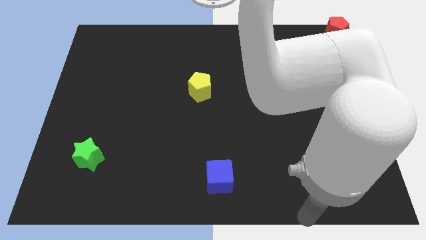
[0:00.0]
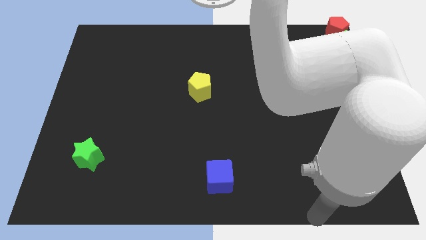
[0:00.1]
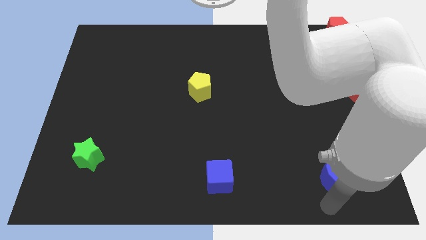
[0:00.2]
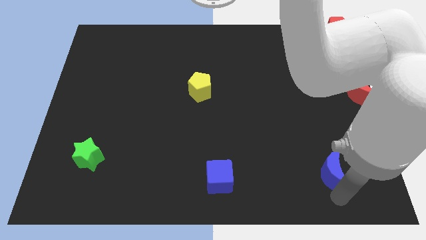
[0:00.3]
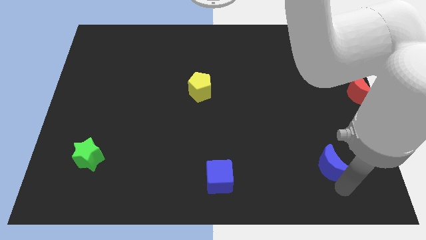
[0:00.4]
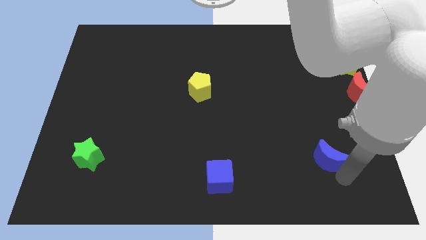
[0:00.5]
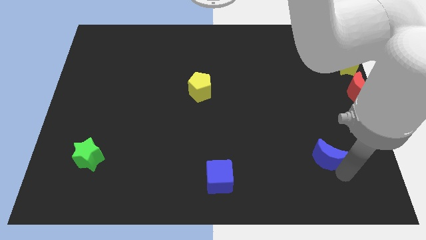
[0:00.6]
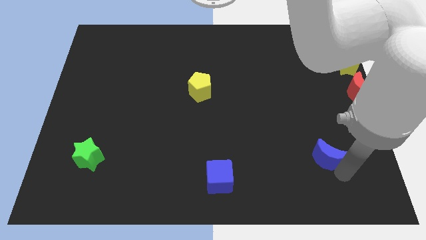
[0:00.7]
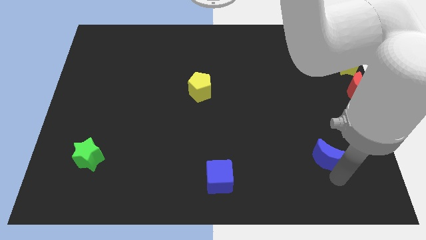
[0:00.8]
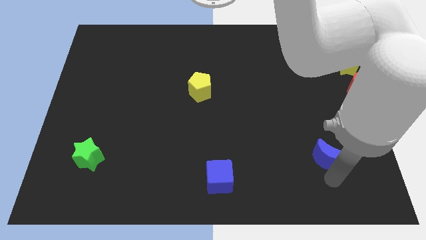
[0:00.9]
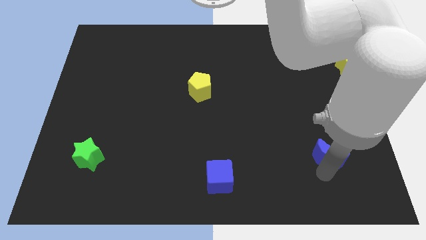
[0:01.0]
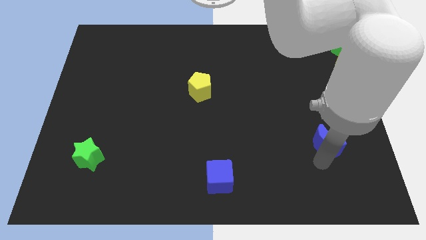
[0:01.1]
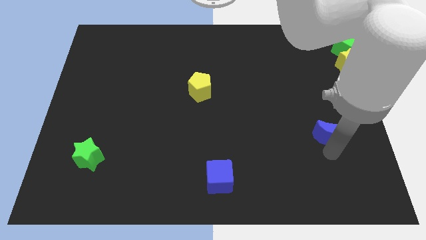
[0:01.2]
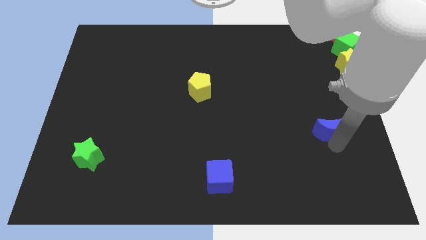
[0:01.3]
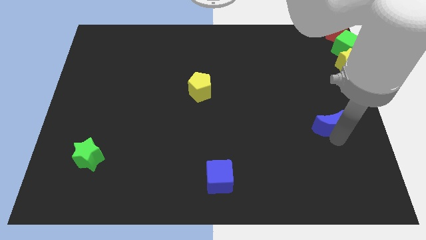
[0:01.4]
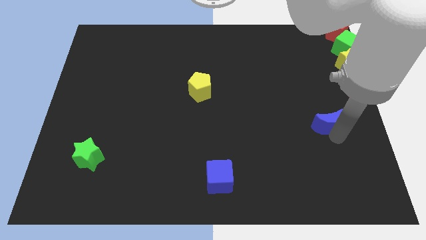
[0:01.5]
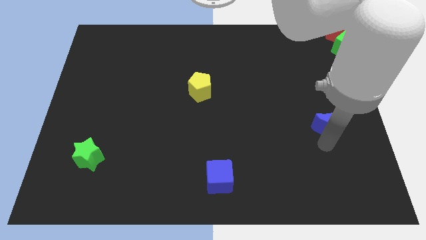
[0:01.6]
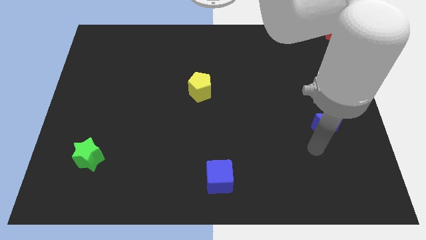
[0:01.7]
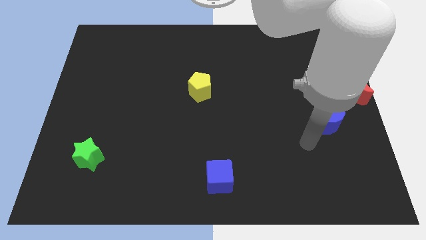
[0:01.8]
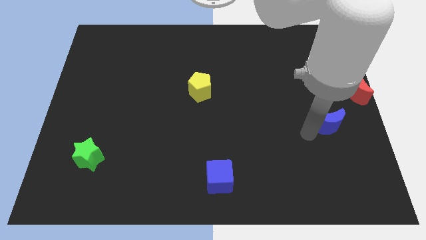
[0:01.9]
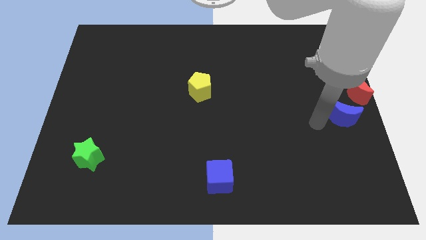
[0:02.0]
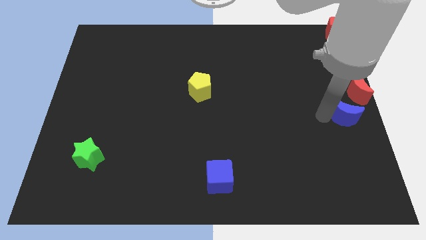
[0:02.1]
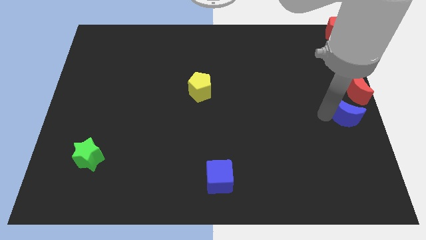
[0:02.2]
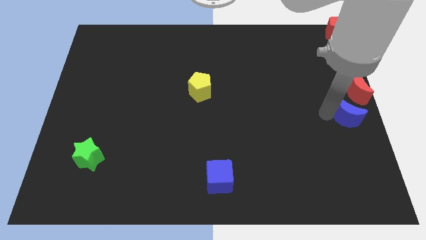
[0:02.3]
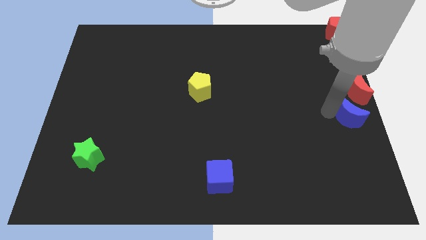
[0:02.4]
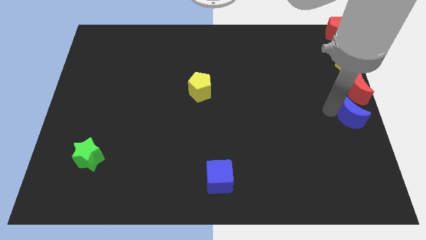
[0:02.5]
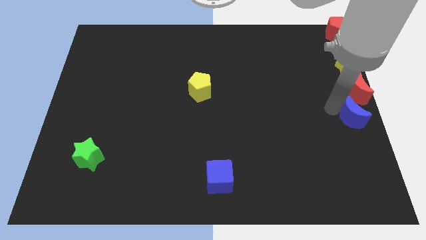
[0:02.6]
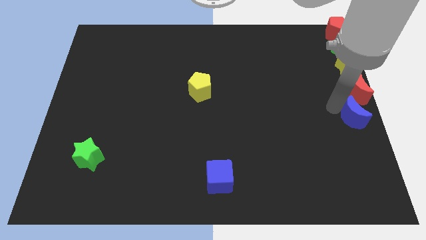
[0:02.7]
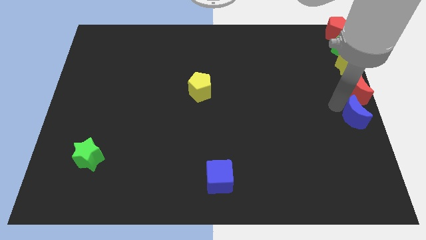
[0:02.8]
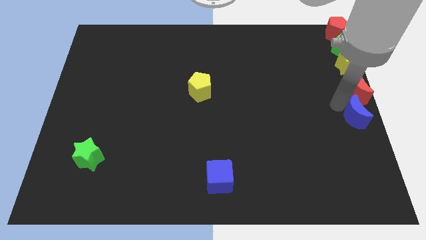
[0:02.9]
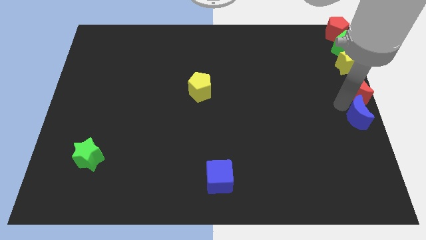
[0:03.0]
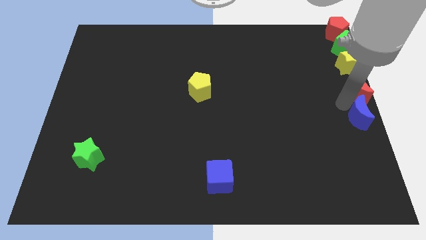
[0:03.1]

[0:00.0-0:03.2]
push blue crescent below red crescent

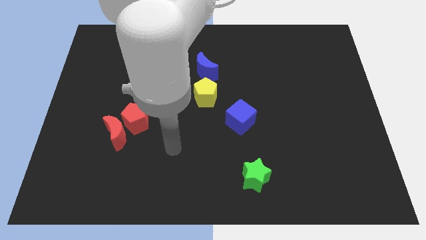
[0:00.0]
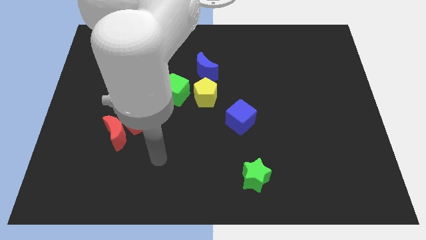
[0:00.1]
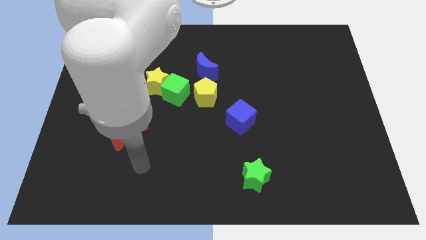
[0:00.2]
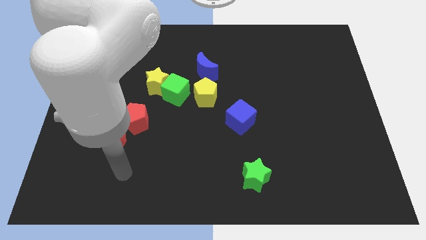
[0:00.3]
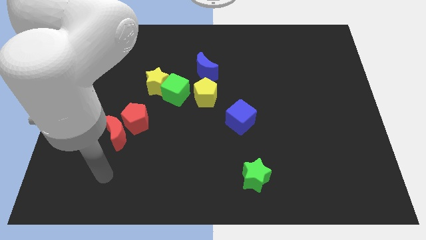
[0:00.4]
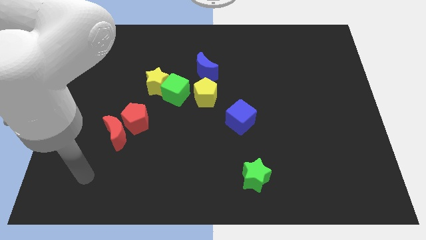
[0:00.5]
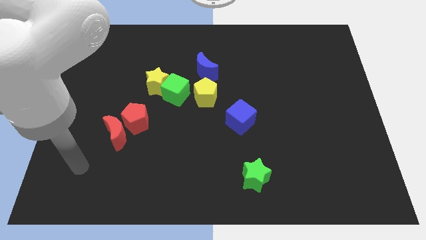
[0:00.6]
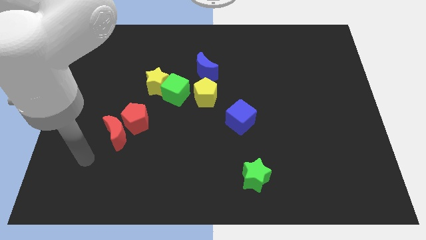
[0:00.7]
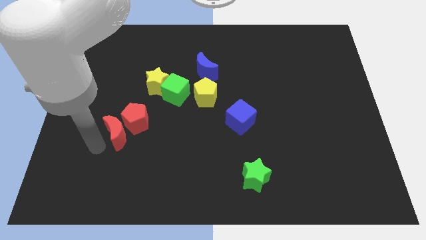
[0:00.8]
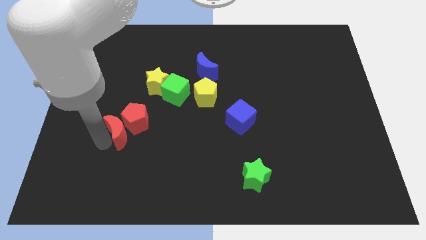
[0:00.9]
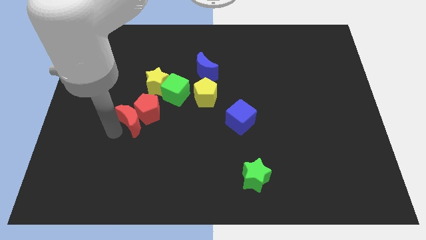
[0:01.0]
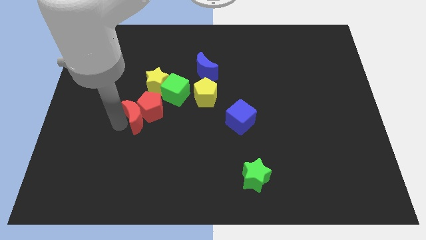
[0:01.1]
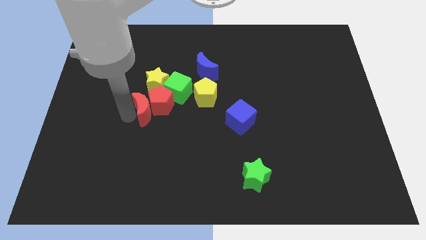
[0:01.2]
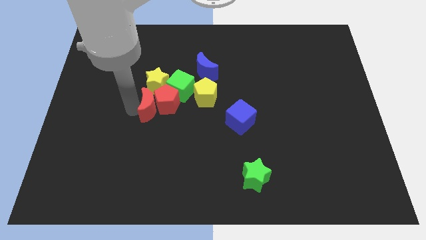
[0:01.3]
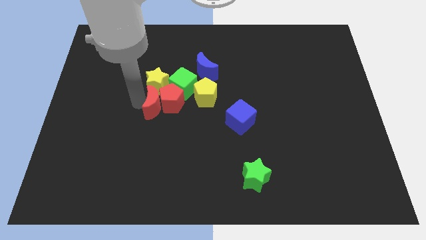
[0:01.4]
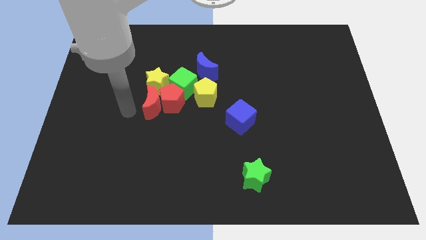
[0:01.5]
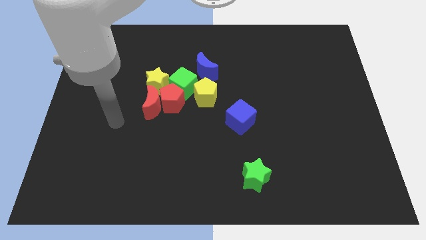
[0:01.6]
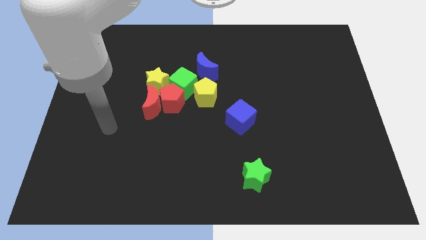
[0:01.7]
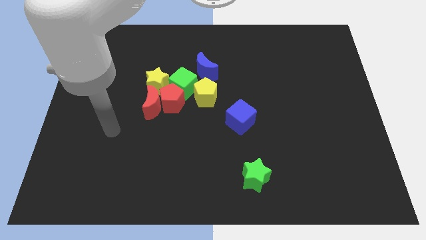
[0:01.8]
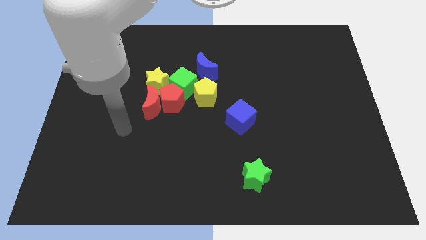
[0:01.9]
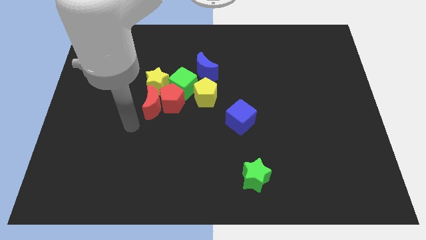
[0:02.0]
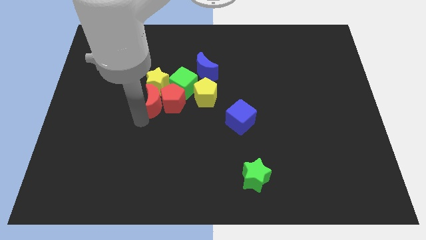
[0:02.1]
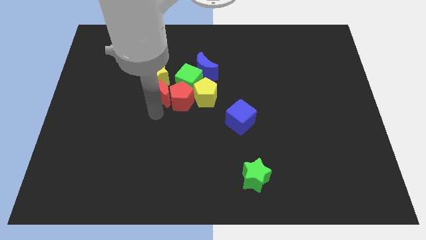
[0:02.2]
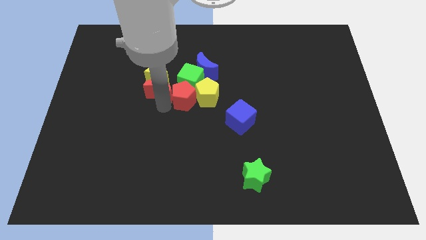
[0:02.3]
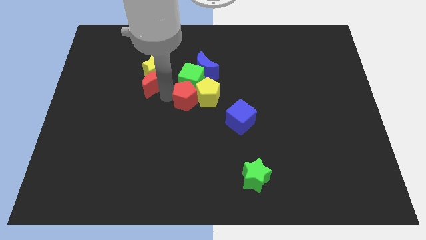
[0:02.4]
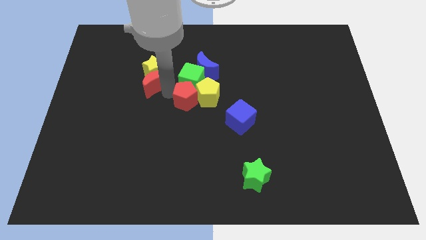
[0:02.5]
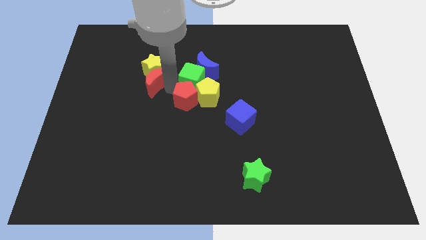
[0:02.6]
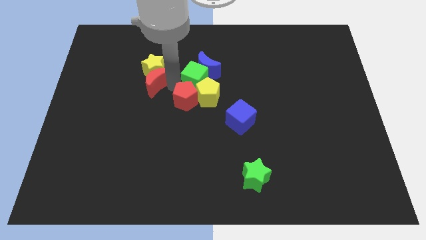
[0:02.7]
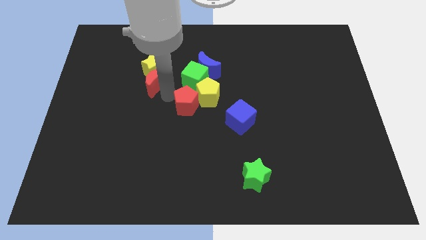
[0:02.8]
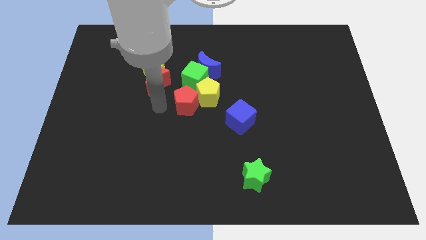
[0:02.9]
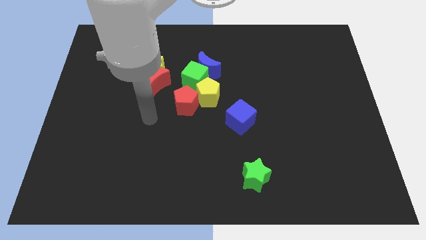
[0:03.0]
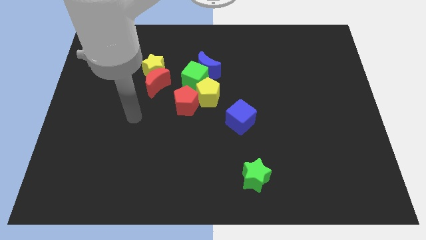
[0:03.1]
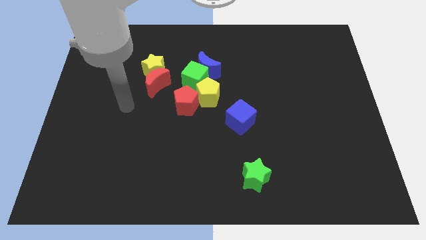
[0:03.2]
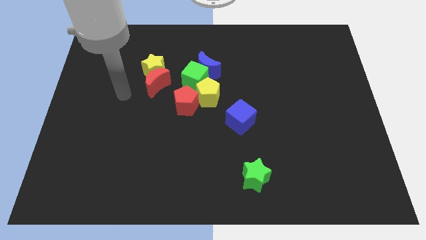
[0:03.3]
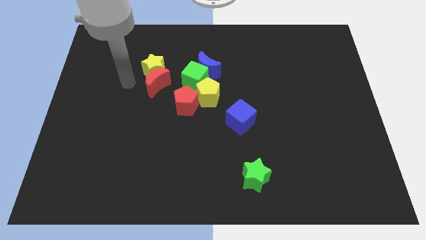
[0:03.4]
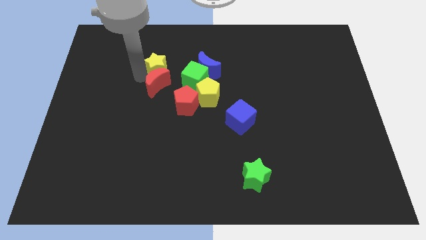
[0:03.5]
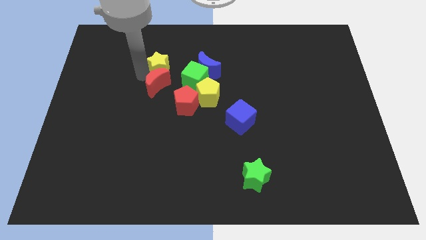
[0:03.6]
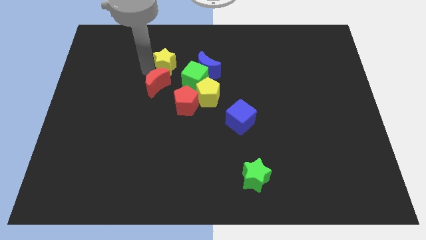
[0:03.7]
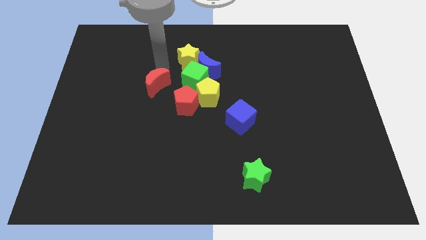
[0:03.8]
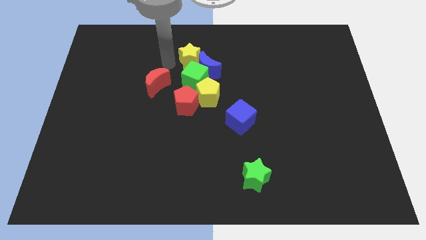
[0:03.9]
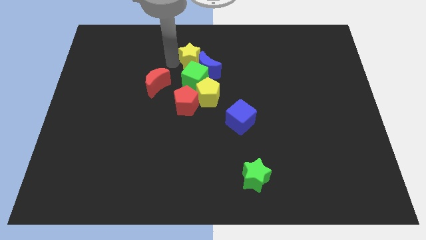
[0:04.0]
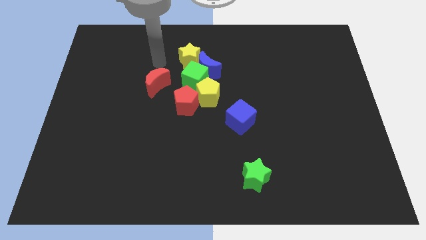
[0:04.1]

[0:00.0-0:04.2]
push the red crescent into the red pentagon

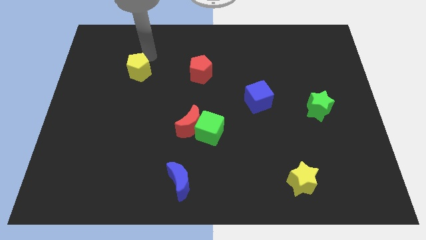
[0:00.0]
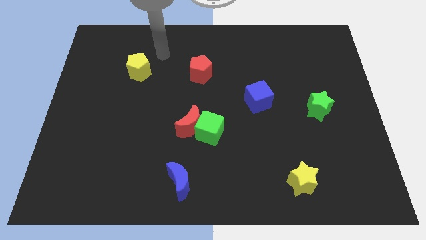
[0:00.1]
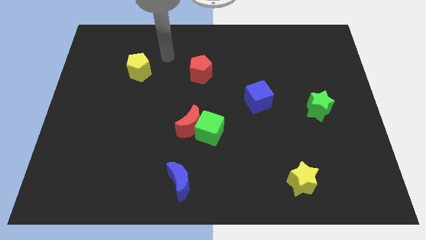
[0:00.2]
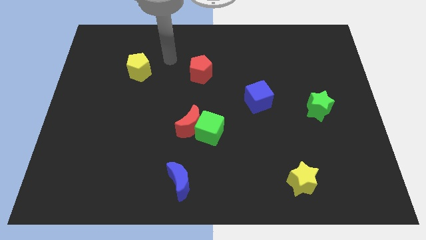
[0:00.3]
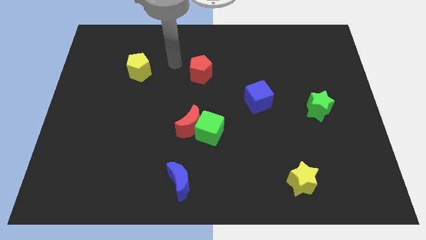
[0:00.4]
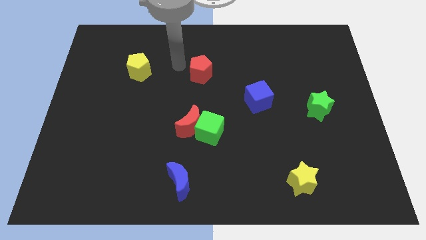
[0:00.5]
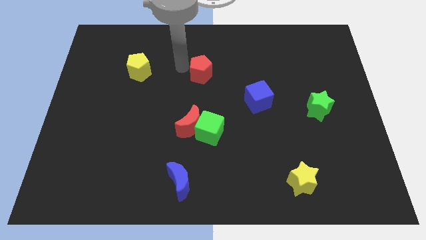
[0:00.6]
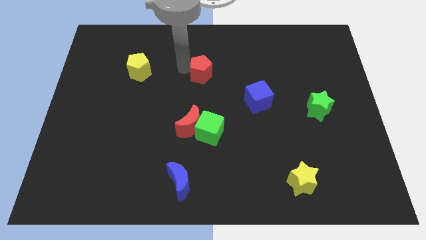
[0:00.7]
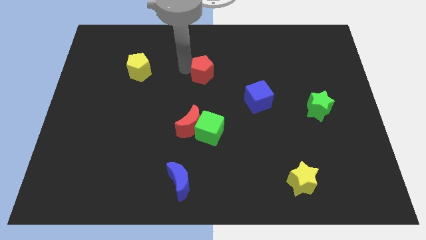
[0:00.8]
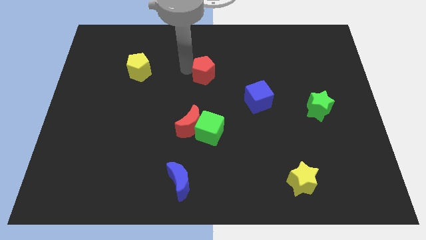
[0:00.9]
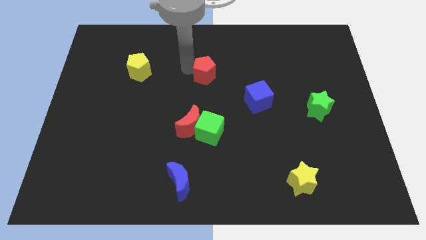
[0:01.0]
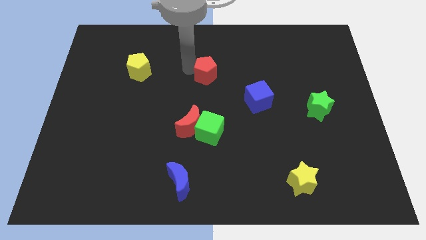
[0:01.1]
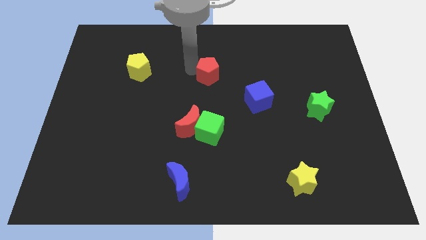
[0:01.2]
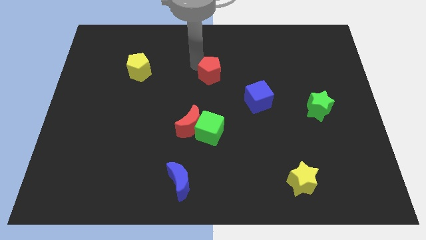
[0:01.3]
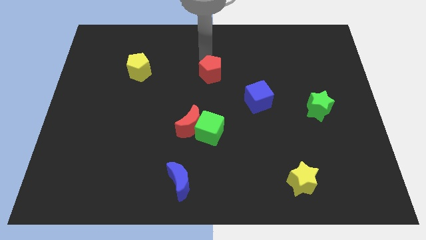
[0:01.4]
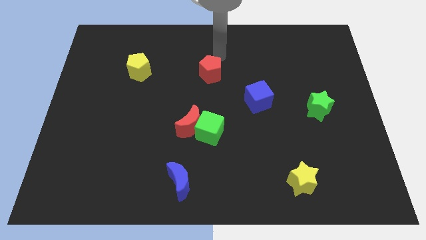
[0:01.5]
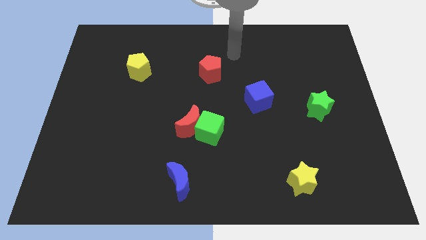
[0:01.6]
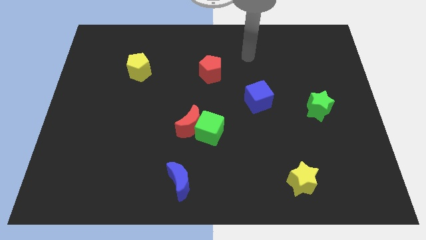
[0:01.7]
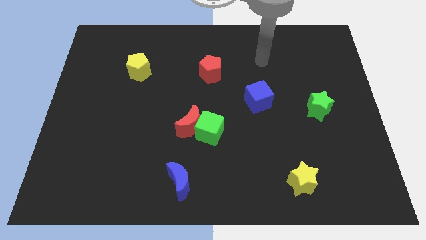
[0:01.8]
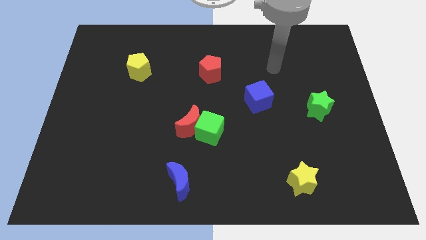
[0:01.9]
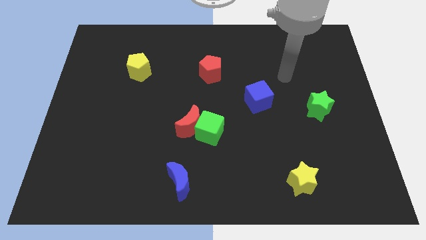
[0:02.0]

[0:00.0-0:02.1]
move the arm above the blue cube
